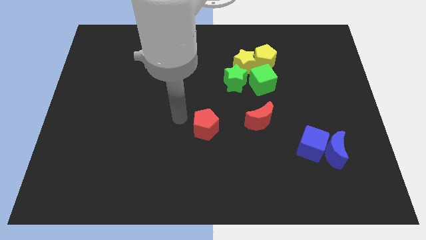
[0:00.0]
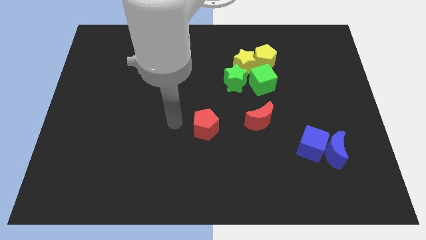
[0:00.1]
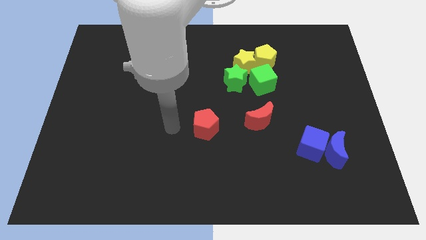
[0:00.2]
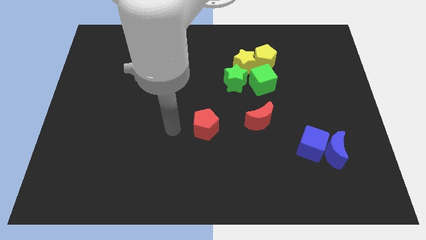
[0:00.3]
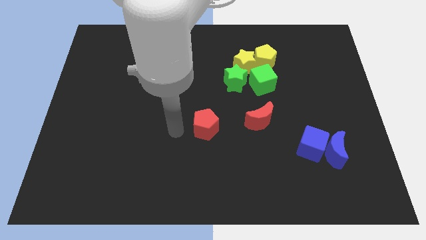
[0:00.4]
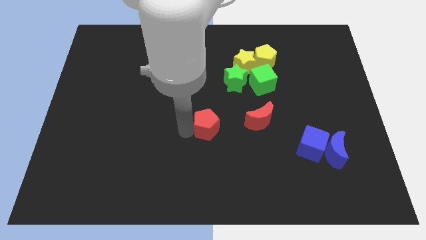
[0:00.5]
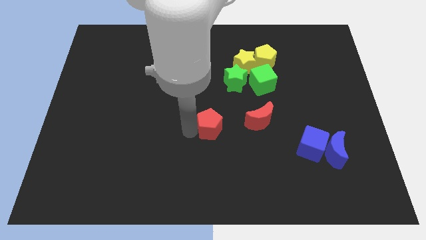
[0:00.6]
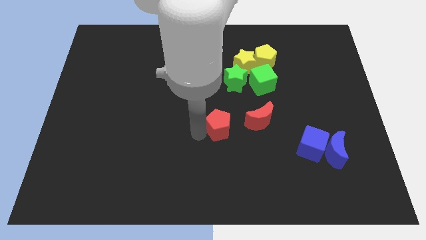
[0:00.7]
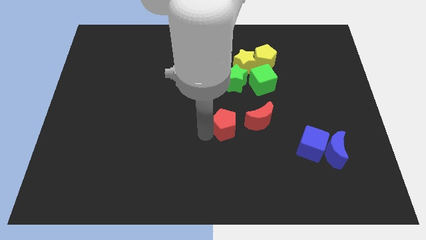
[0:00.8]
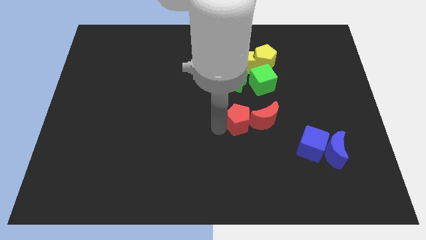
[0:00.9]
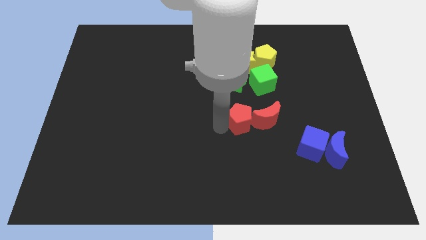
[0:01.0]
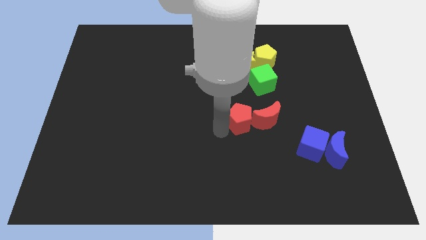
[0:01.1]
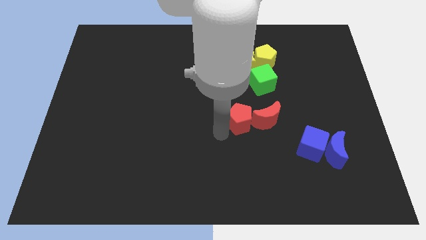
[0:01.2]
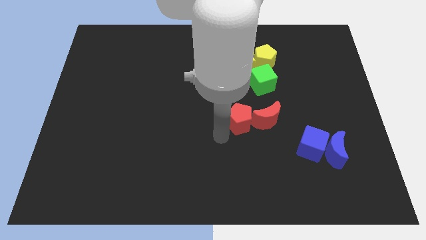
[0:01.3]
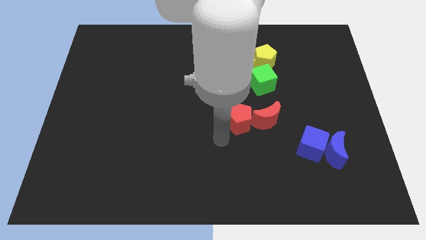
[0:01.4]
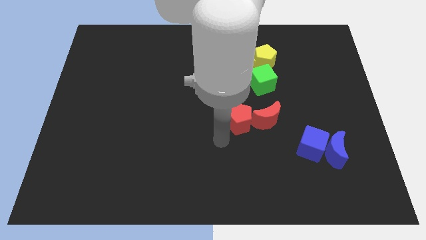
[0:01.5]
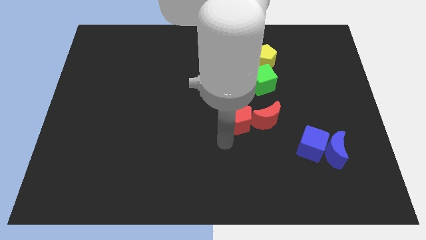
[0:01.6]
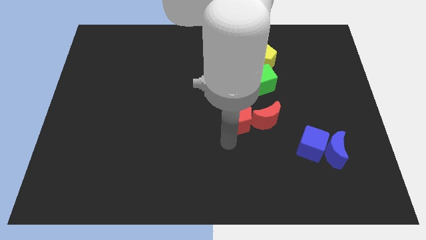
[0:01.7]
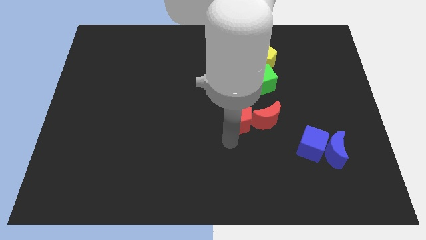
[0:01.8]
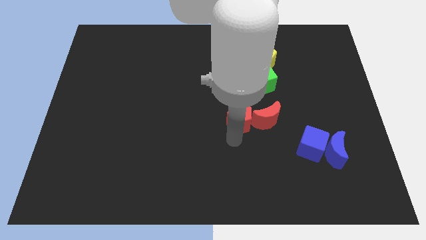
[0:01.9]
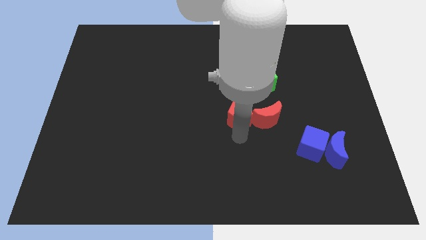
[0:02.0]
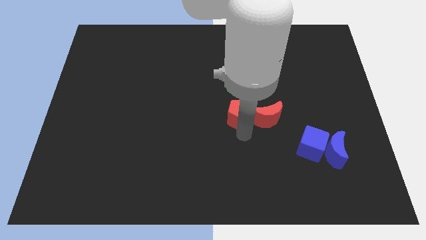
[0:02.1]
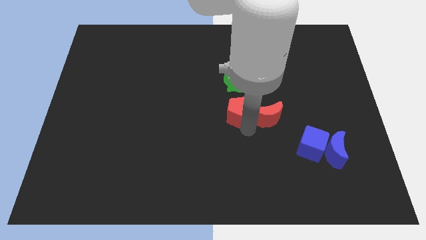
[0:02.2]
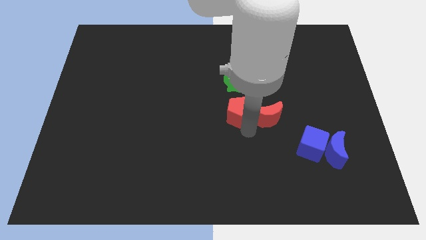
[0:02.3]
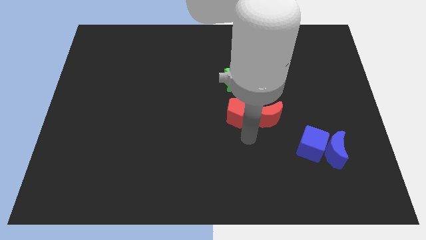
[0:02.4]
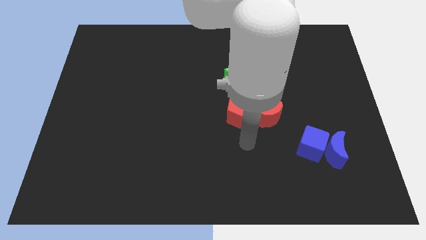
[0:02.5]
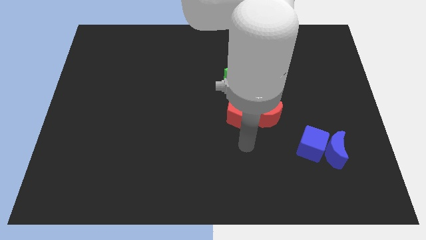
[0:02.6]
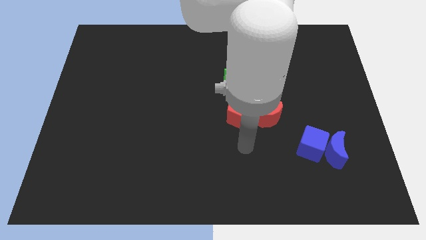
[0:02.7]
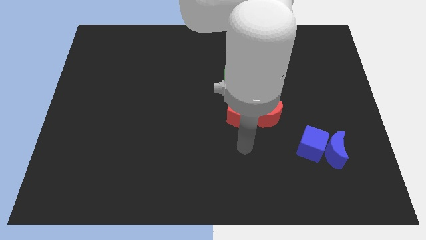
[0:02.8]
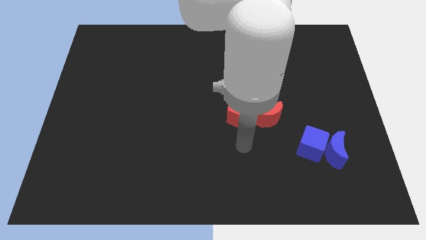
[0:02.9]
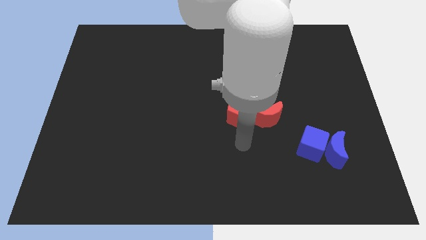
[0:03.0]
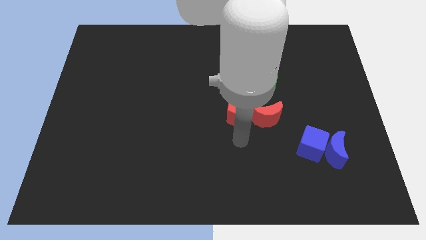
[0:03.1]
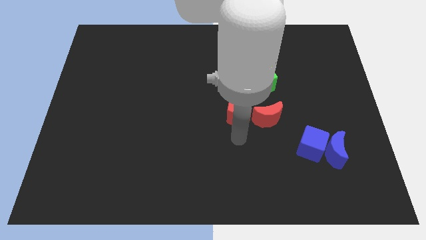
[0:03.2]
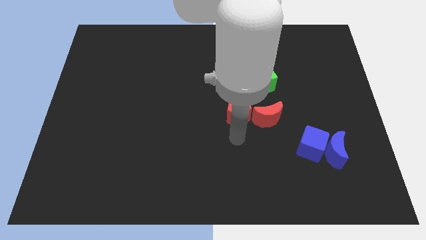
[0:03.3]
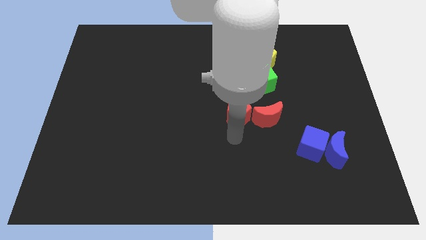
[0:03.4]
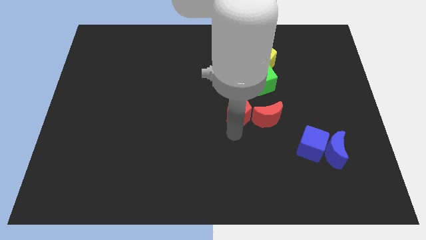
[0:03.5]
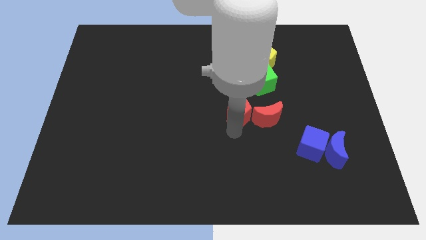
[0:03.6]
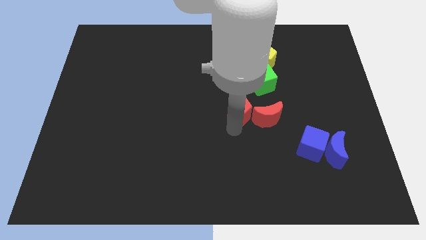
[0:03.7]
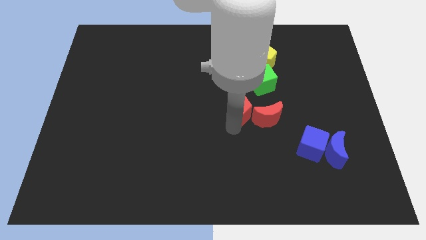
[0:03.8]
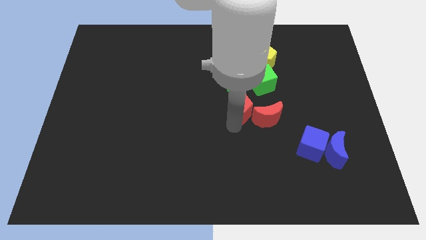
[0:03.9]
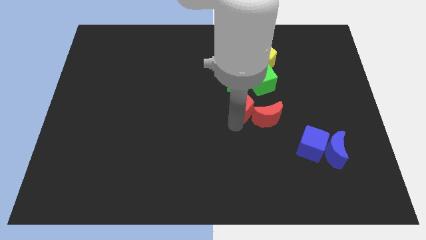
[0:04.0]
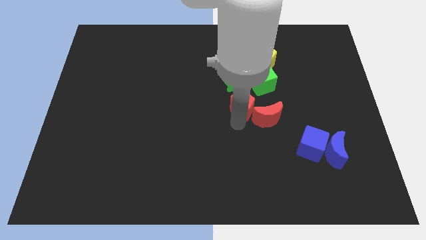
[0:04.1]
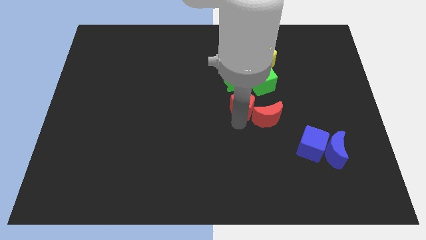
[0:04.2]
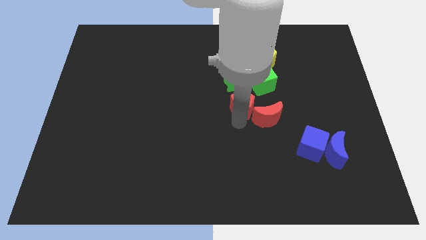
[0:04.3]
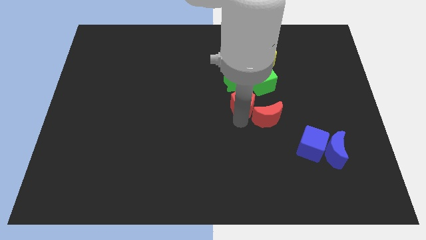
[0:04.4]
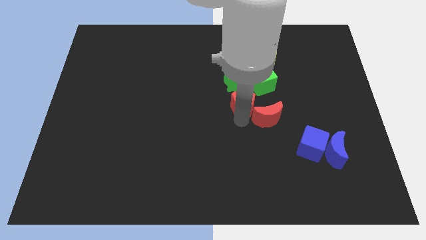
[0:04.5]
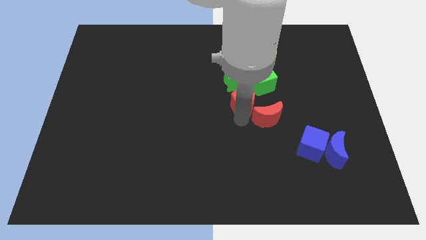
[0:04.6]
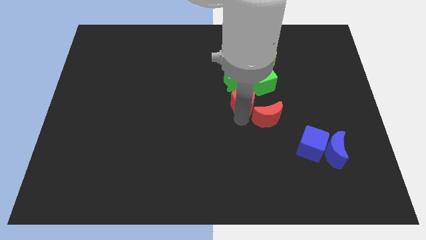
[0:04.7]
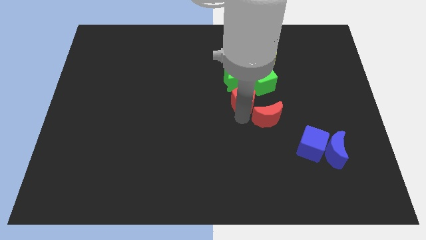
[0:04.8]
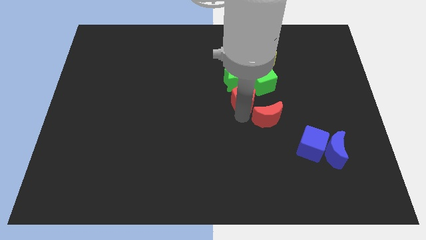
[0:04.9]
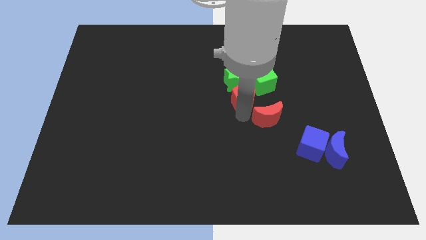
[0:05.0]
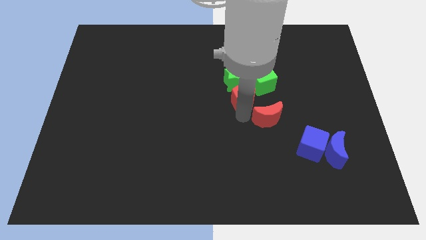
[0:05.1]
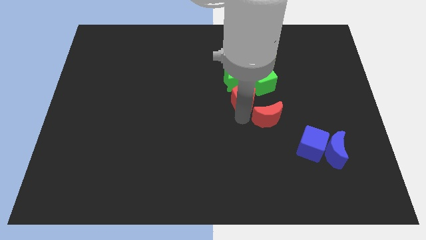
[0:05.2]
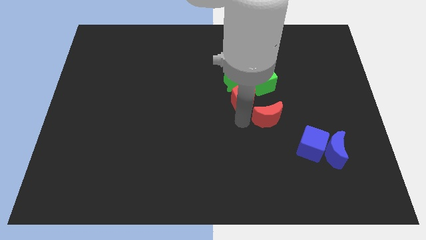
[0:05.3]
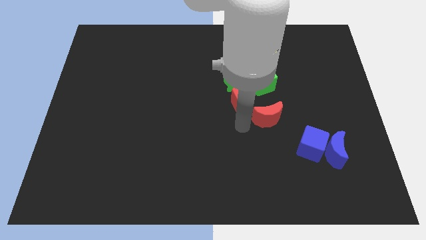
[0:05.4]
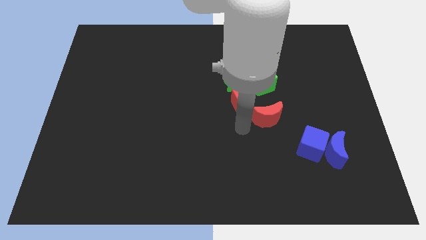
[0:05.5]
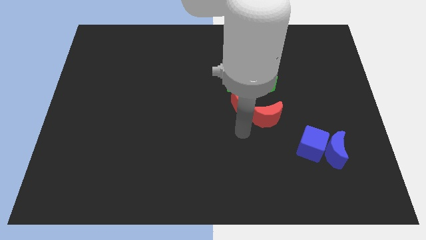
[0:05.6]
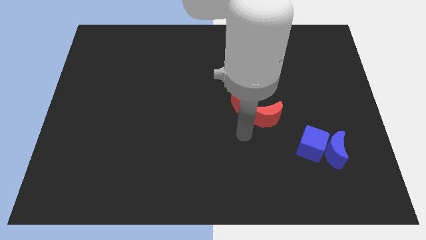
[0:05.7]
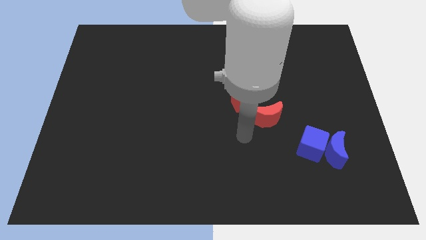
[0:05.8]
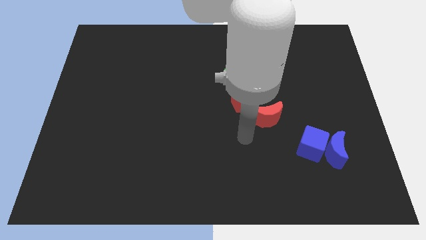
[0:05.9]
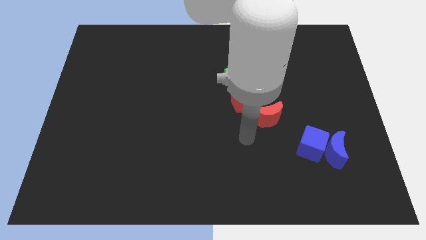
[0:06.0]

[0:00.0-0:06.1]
push red pentagon to the bottom of green star

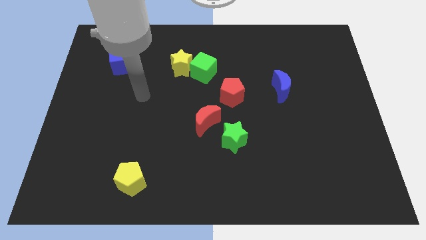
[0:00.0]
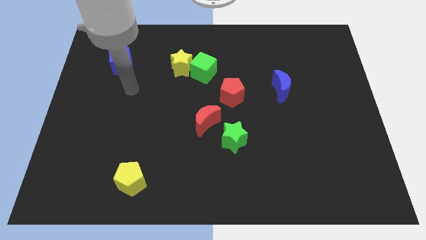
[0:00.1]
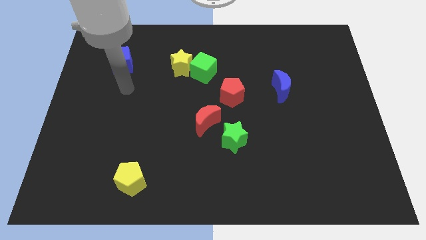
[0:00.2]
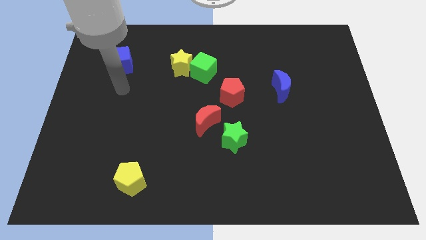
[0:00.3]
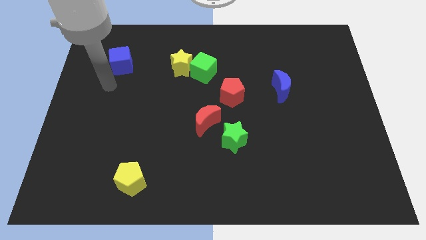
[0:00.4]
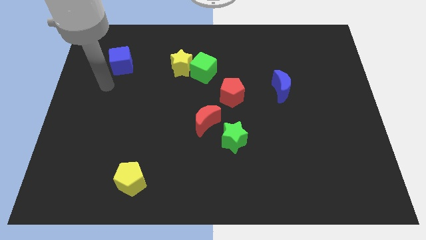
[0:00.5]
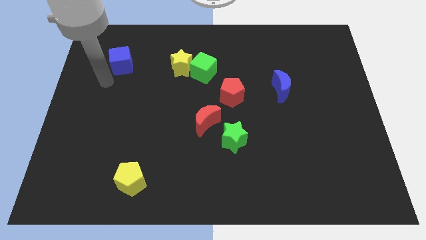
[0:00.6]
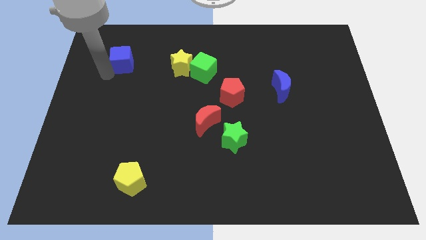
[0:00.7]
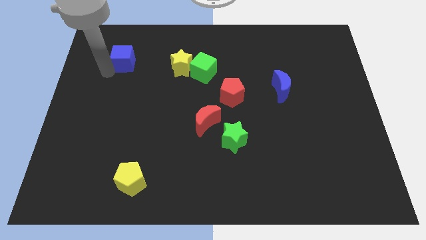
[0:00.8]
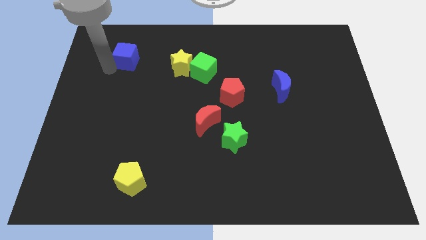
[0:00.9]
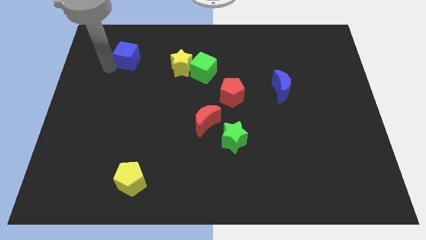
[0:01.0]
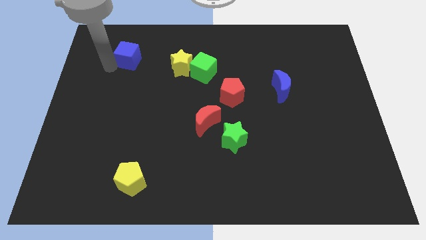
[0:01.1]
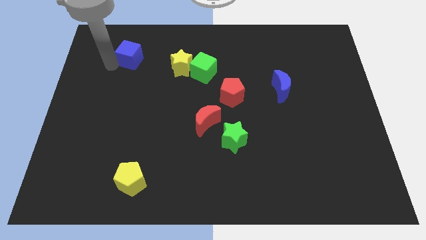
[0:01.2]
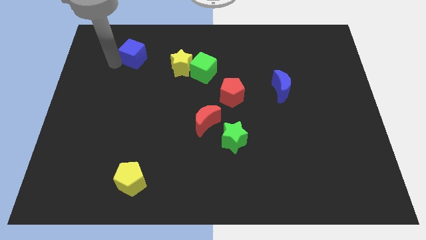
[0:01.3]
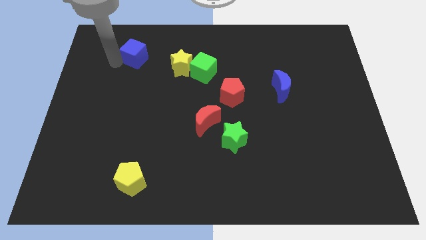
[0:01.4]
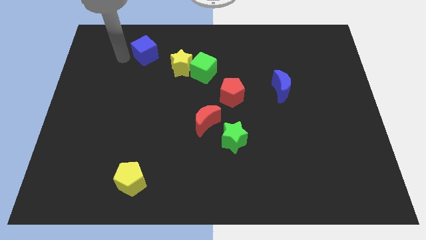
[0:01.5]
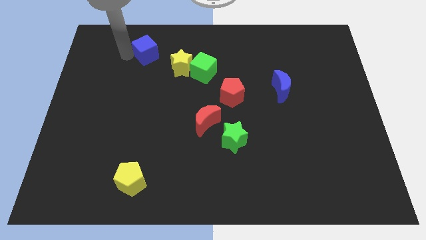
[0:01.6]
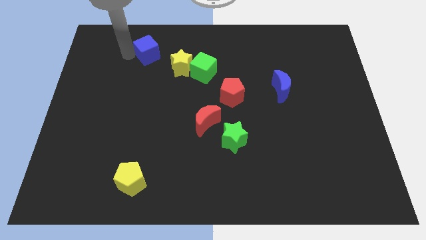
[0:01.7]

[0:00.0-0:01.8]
push the blue cube towards the yellow star

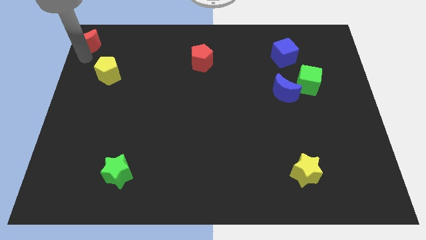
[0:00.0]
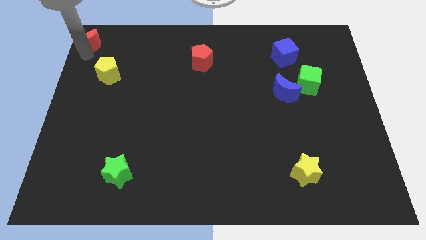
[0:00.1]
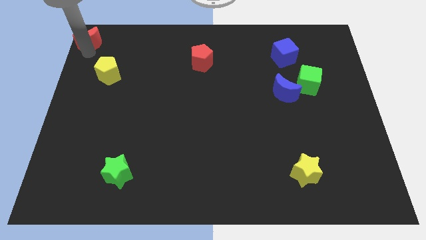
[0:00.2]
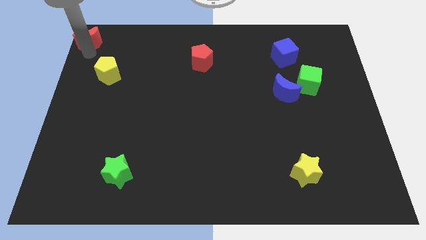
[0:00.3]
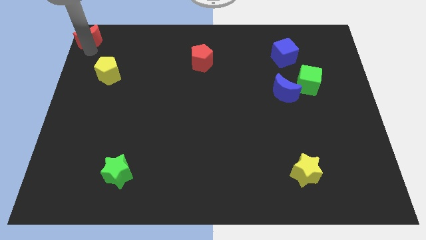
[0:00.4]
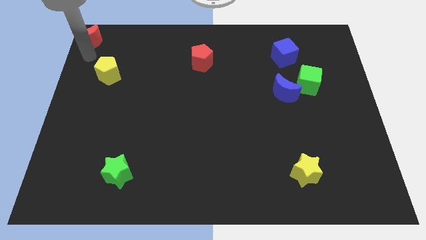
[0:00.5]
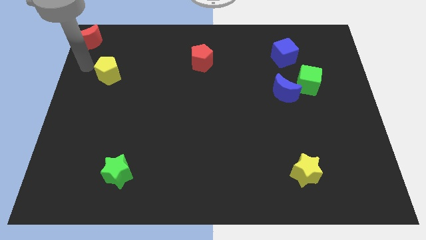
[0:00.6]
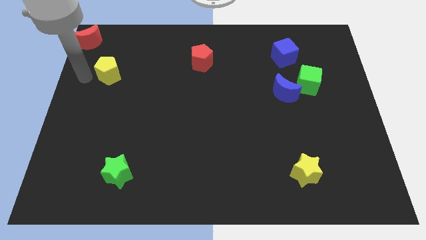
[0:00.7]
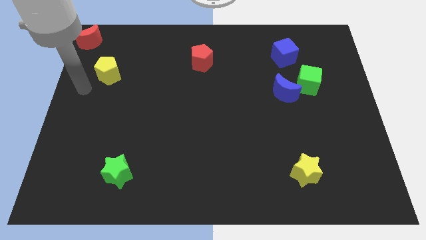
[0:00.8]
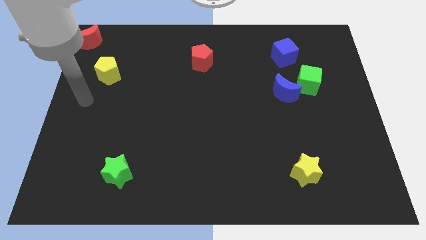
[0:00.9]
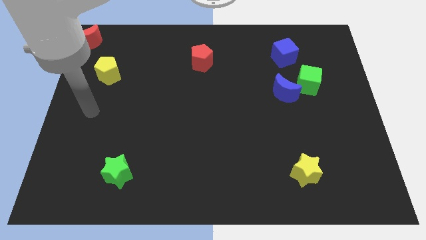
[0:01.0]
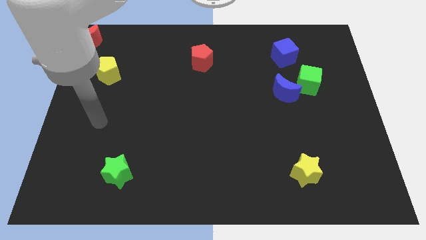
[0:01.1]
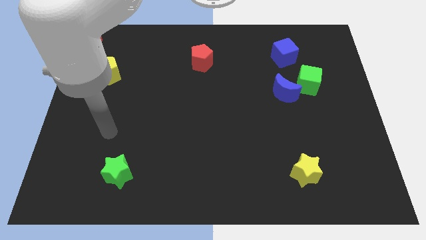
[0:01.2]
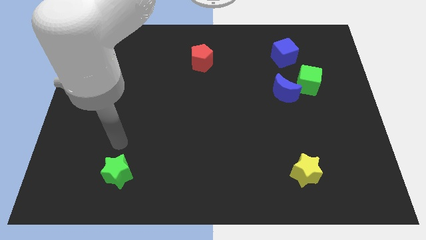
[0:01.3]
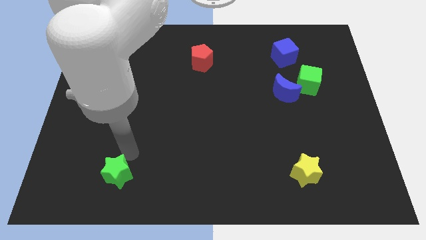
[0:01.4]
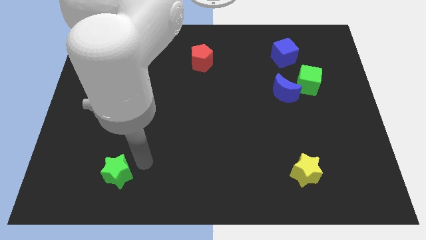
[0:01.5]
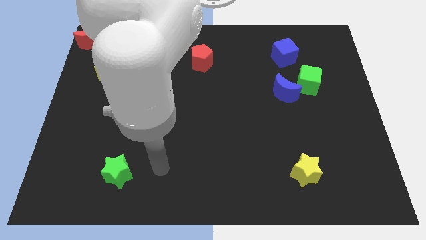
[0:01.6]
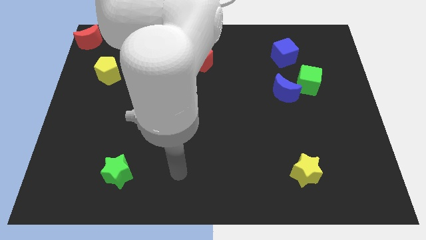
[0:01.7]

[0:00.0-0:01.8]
point the arm in between the green star and the yellow star
